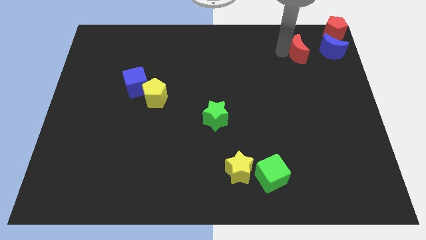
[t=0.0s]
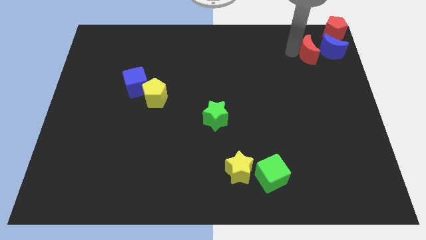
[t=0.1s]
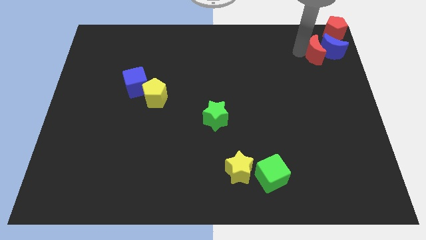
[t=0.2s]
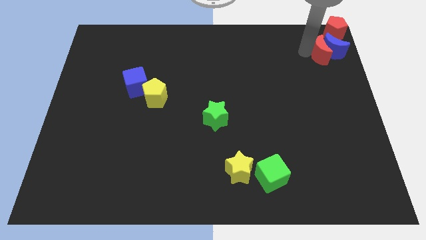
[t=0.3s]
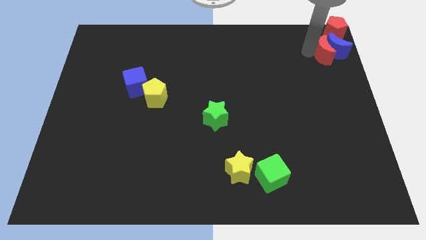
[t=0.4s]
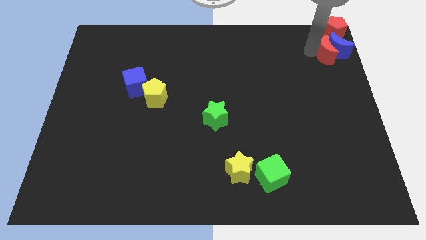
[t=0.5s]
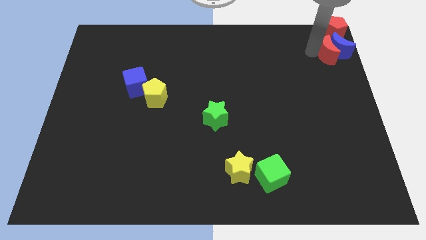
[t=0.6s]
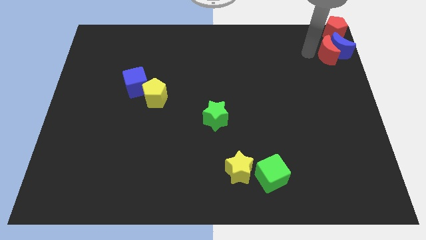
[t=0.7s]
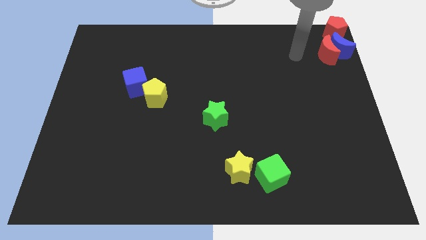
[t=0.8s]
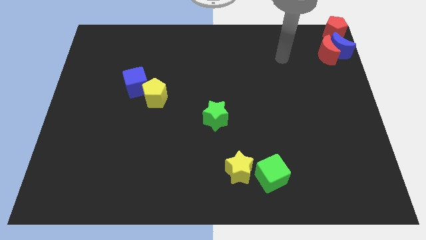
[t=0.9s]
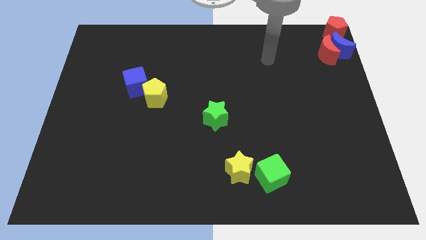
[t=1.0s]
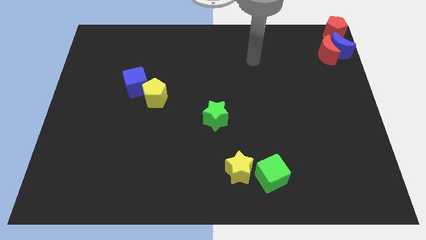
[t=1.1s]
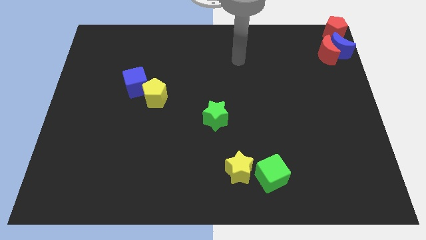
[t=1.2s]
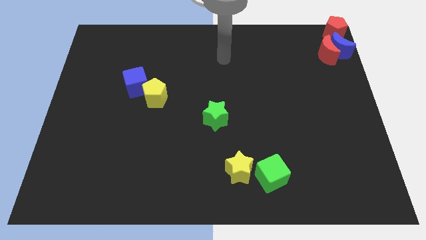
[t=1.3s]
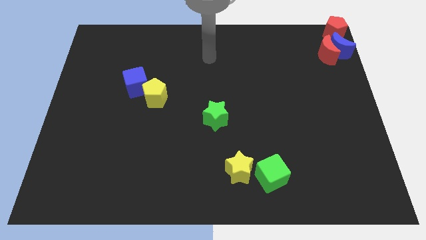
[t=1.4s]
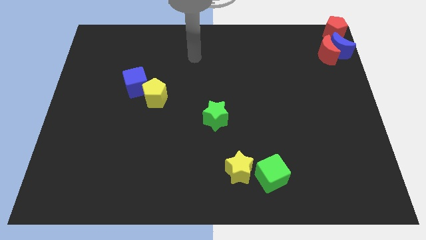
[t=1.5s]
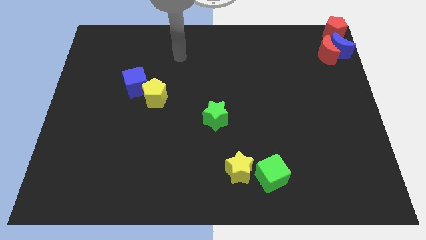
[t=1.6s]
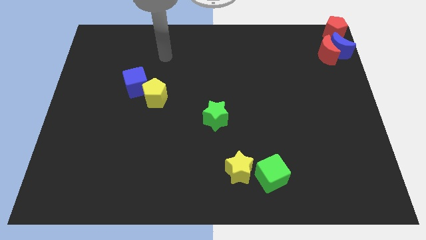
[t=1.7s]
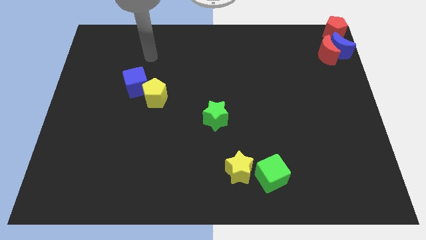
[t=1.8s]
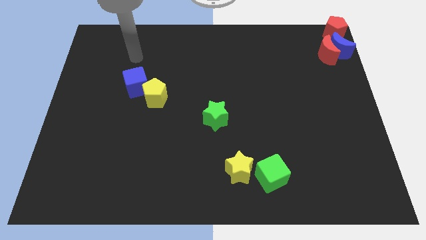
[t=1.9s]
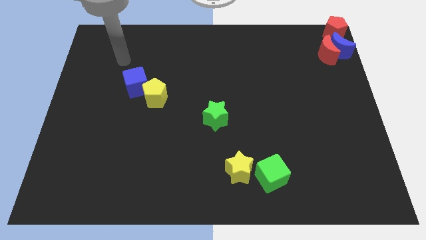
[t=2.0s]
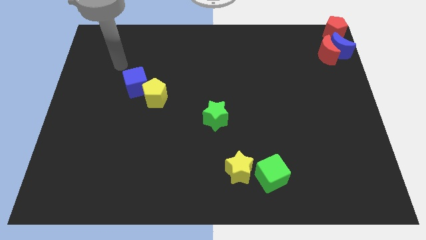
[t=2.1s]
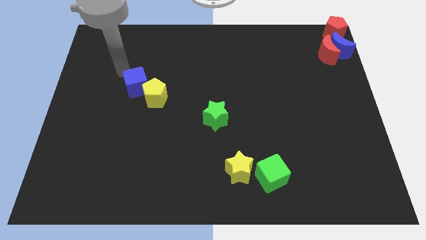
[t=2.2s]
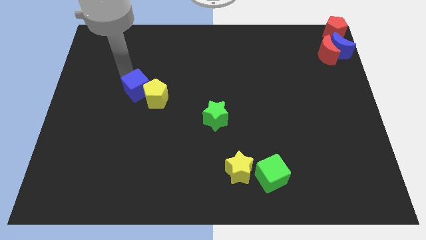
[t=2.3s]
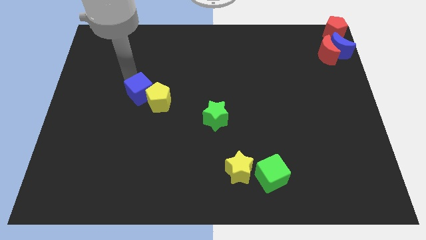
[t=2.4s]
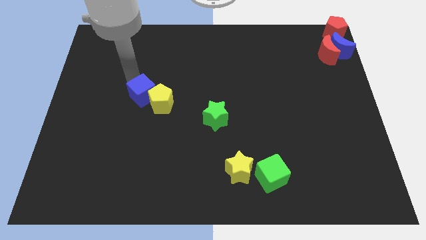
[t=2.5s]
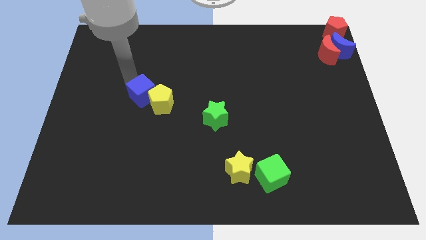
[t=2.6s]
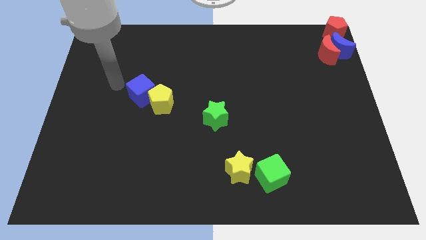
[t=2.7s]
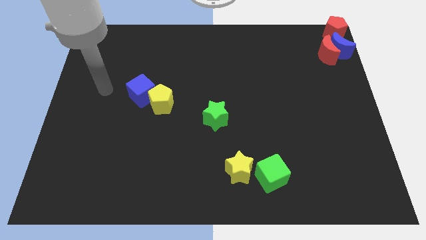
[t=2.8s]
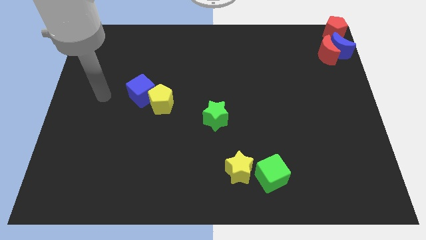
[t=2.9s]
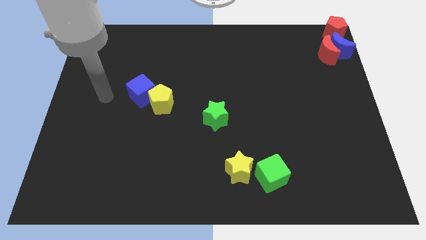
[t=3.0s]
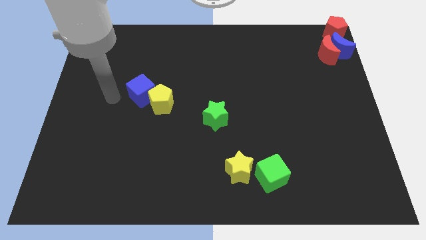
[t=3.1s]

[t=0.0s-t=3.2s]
push the red crescent into the blue moon

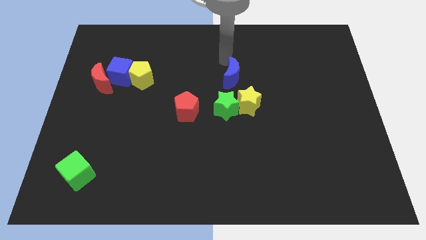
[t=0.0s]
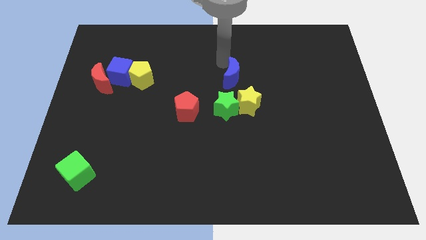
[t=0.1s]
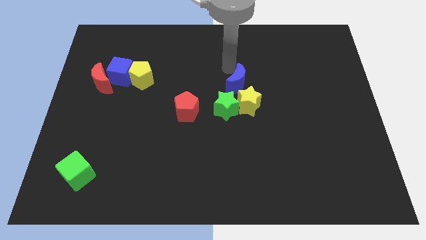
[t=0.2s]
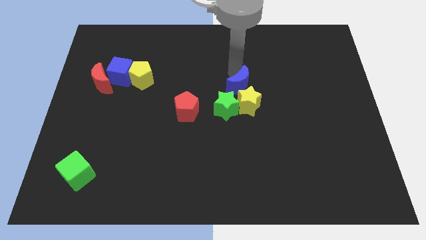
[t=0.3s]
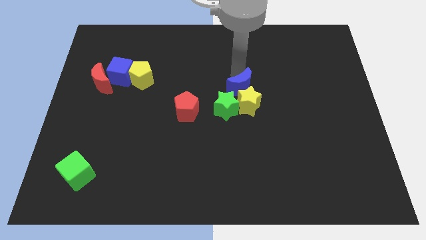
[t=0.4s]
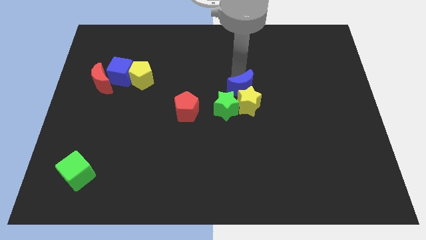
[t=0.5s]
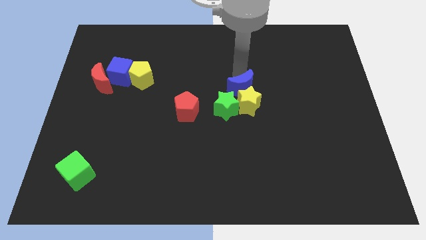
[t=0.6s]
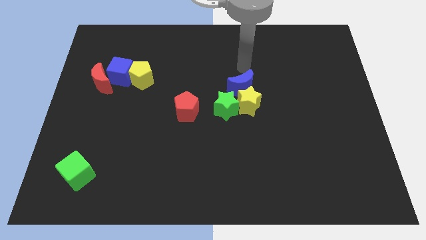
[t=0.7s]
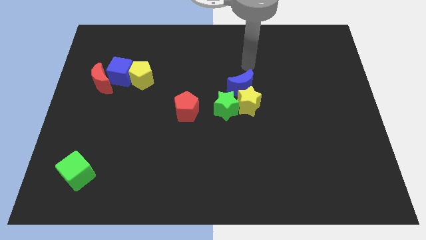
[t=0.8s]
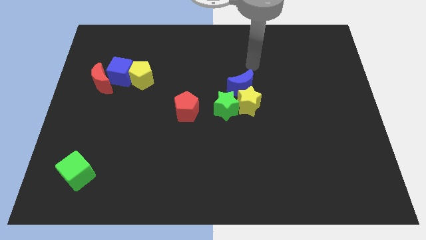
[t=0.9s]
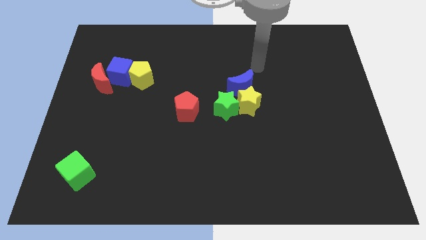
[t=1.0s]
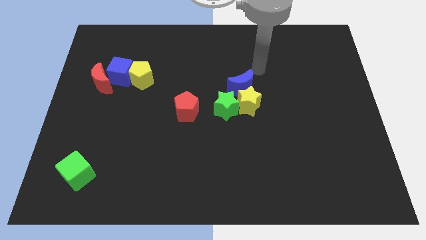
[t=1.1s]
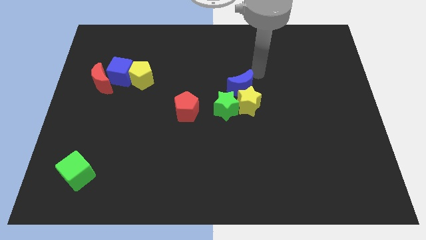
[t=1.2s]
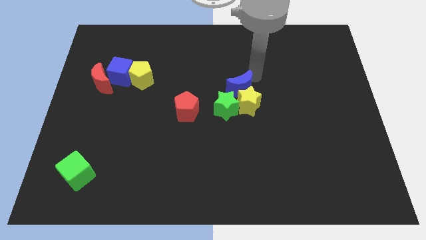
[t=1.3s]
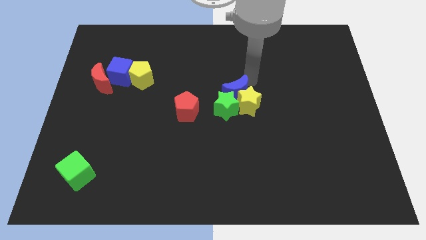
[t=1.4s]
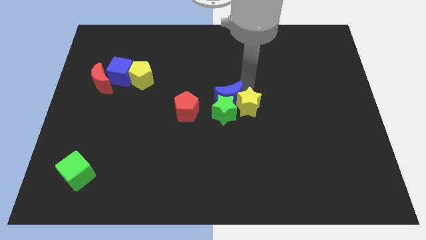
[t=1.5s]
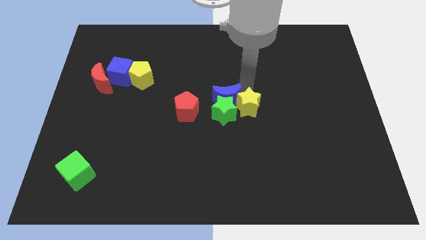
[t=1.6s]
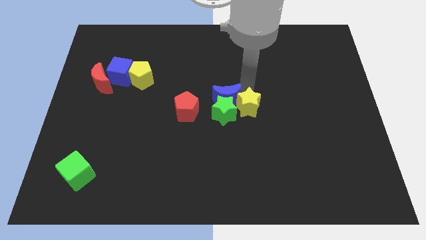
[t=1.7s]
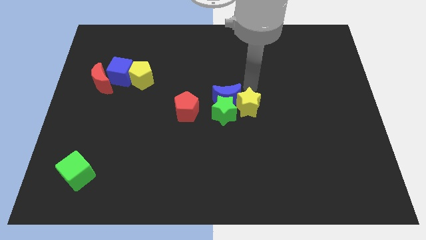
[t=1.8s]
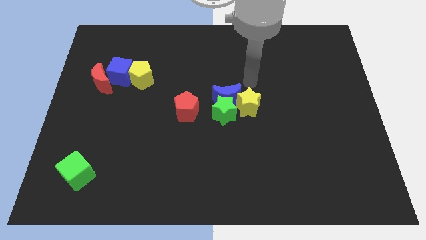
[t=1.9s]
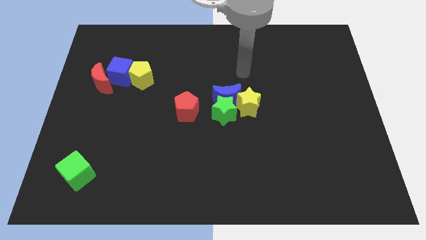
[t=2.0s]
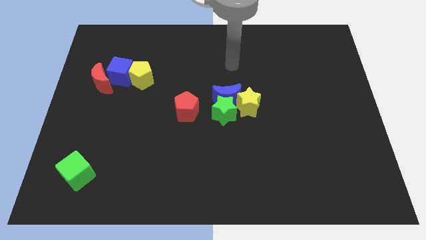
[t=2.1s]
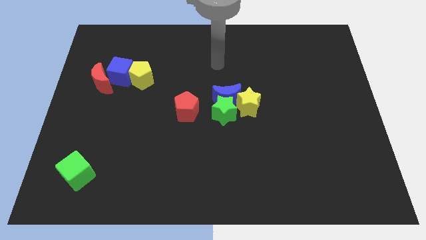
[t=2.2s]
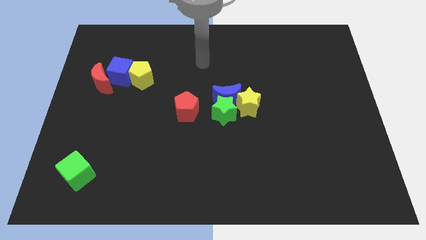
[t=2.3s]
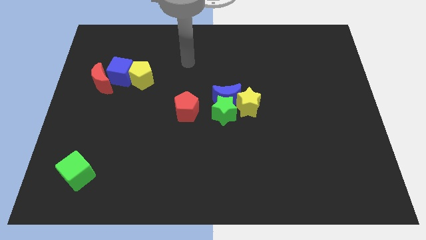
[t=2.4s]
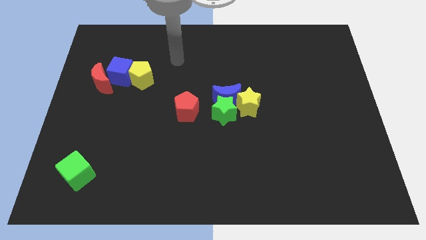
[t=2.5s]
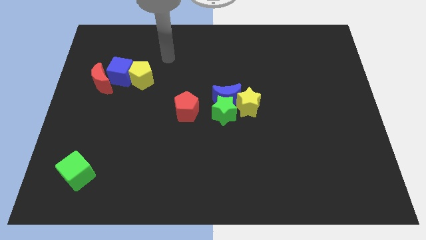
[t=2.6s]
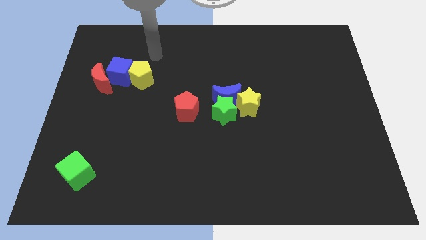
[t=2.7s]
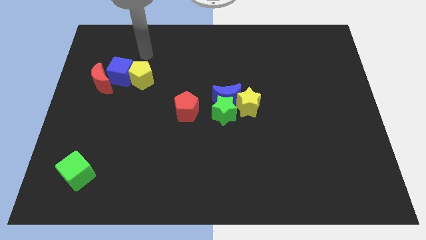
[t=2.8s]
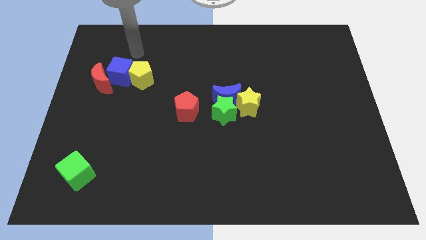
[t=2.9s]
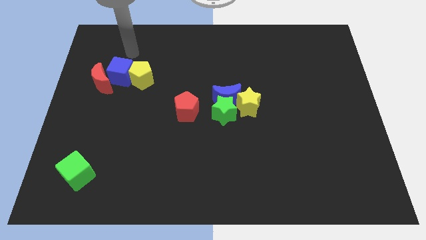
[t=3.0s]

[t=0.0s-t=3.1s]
push the blue crescent into the green star

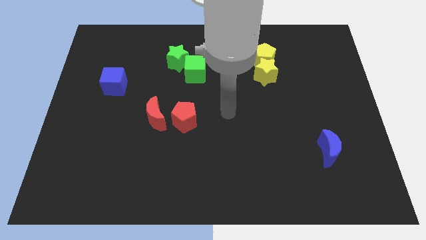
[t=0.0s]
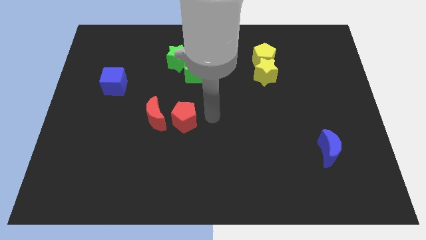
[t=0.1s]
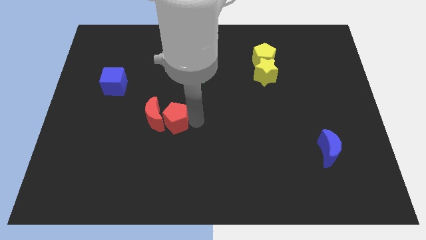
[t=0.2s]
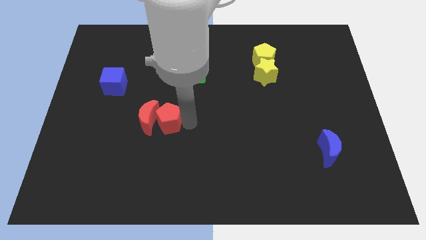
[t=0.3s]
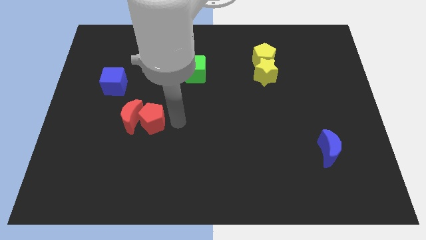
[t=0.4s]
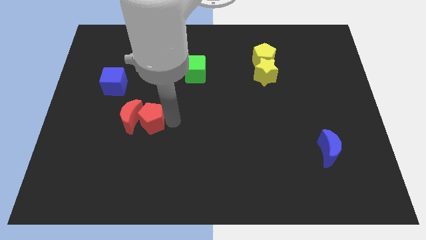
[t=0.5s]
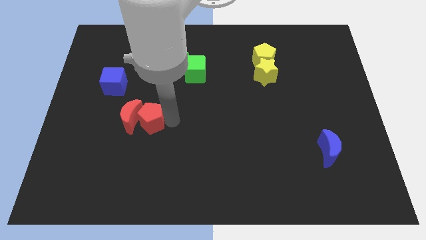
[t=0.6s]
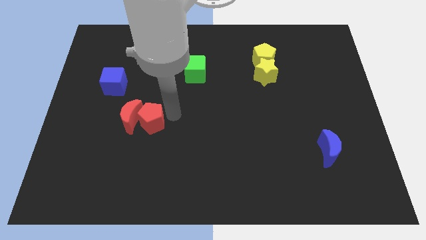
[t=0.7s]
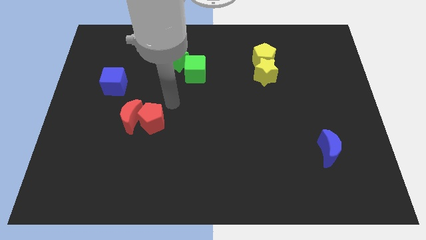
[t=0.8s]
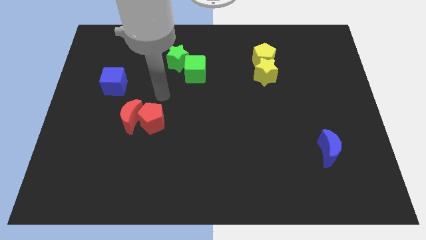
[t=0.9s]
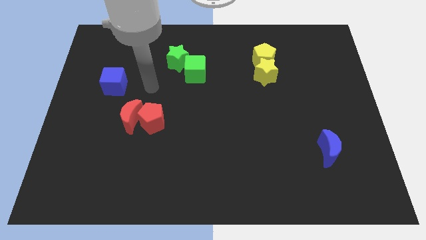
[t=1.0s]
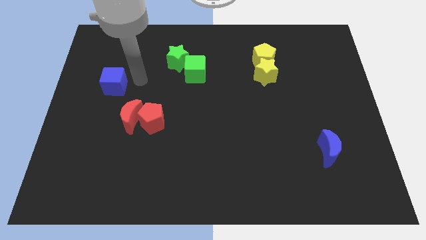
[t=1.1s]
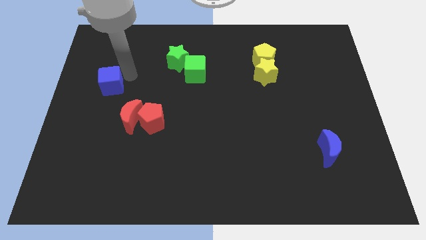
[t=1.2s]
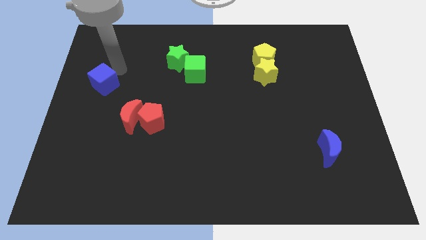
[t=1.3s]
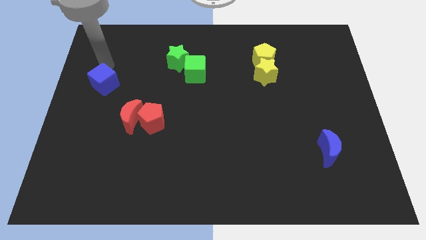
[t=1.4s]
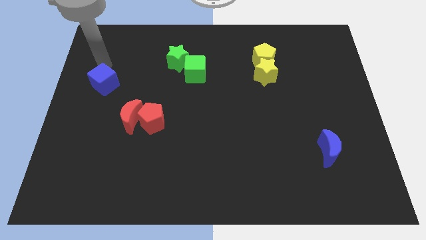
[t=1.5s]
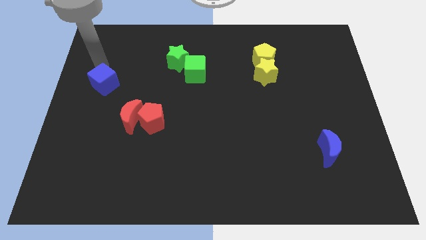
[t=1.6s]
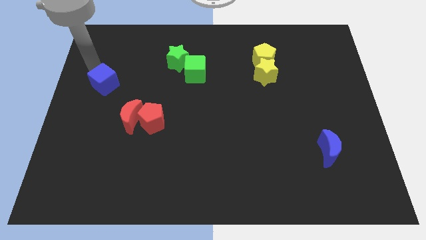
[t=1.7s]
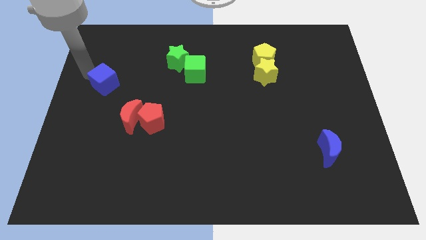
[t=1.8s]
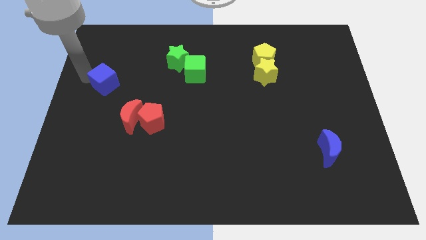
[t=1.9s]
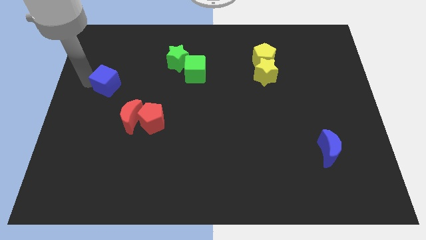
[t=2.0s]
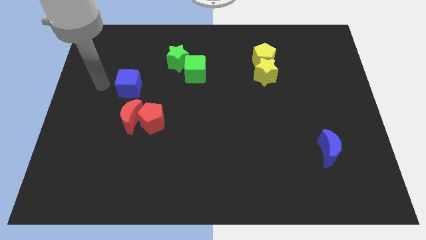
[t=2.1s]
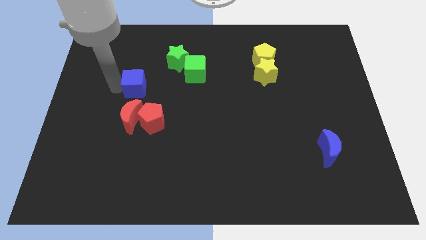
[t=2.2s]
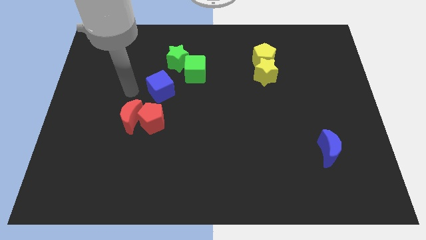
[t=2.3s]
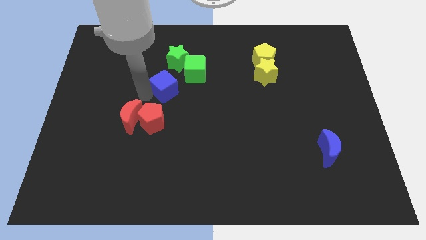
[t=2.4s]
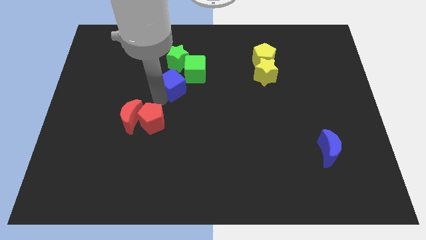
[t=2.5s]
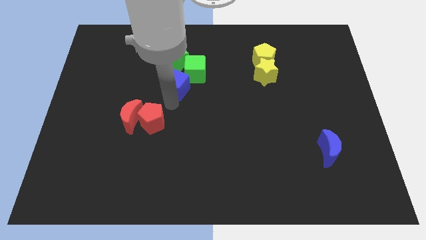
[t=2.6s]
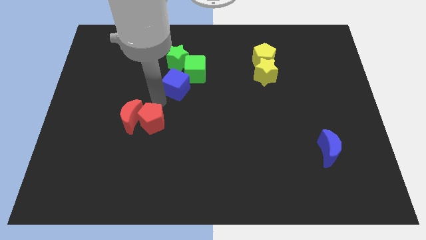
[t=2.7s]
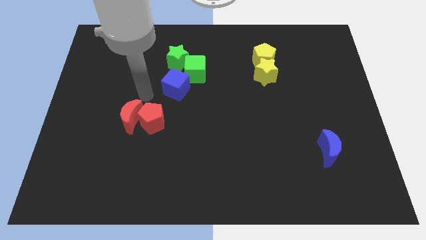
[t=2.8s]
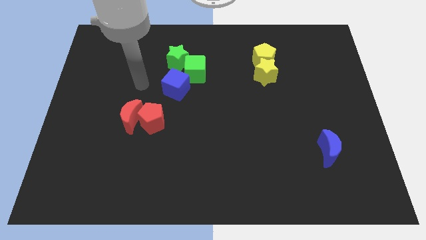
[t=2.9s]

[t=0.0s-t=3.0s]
push the red blocks and blue cube in different directions
